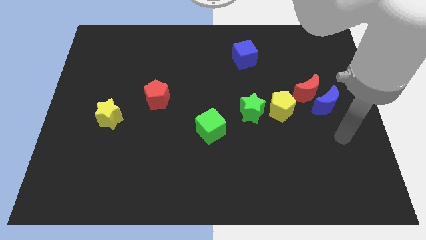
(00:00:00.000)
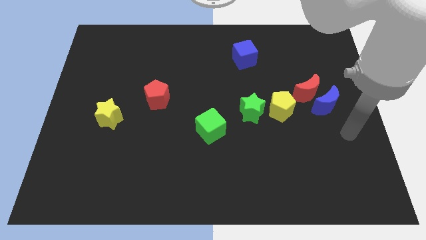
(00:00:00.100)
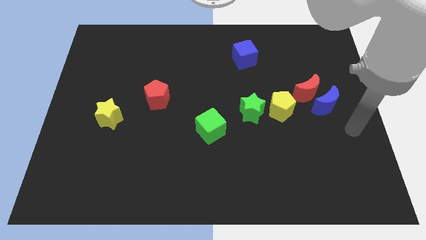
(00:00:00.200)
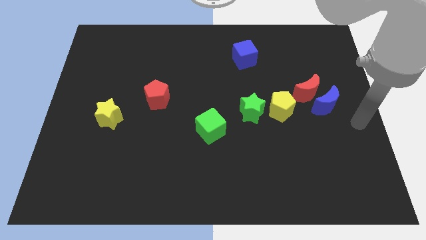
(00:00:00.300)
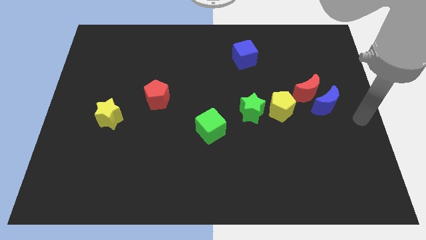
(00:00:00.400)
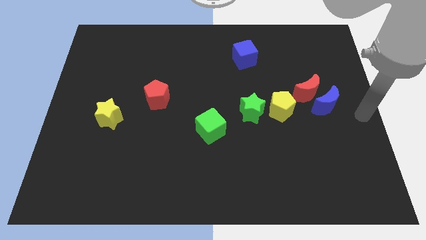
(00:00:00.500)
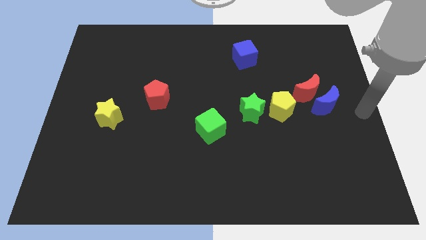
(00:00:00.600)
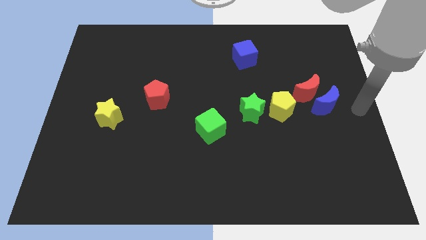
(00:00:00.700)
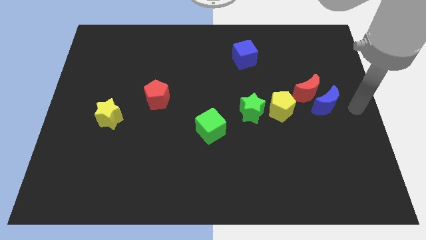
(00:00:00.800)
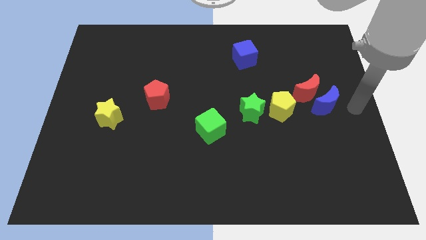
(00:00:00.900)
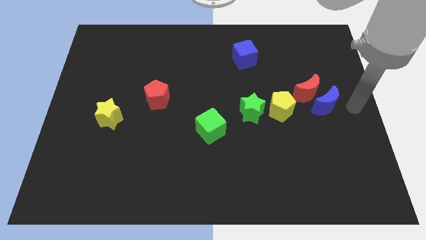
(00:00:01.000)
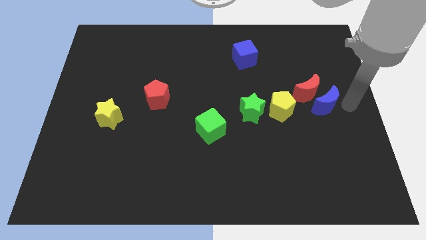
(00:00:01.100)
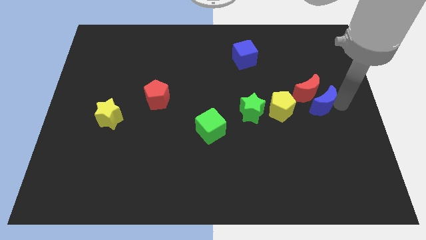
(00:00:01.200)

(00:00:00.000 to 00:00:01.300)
place the arm right side of the blue moon

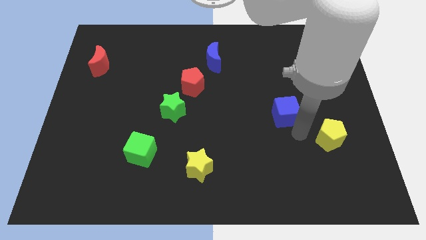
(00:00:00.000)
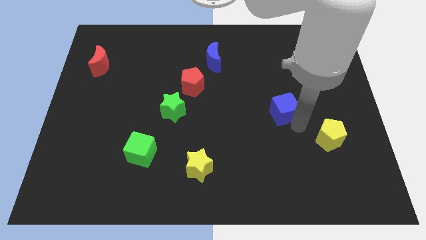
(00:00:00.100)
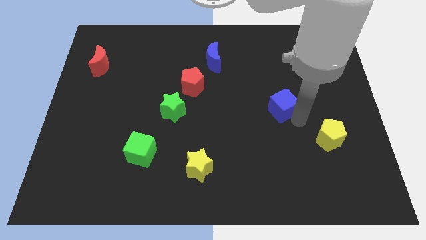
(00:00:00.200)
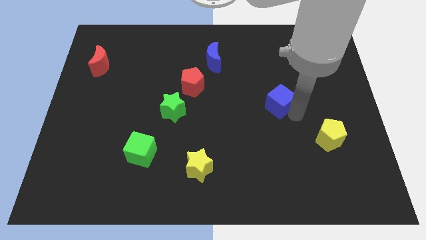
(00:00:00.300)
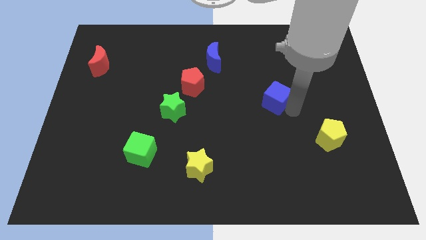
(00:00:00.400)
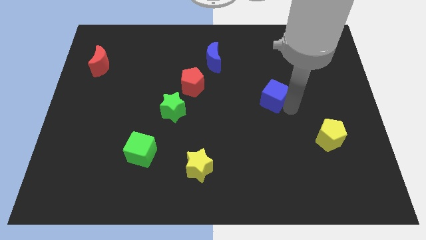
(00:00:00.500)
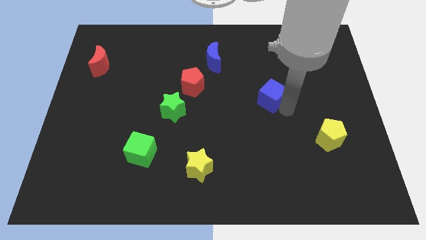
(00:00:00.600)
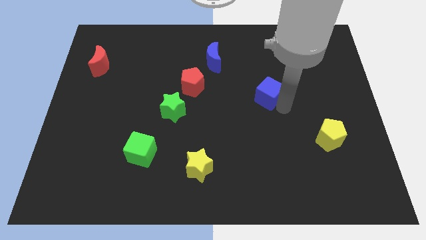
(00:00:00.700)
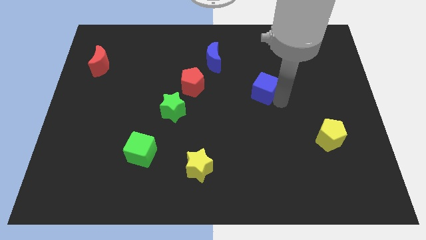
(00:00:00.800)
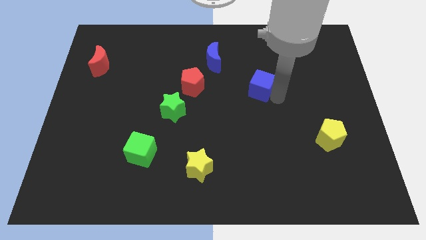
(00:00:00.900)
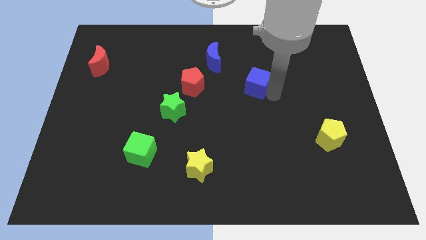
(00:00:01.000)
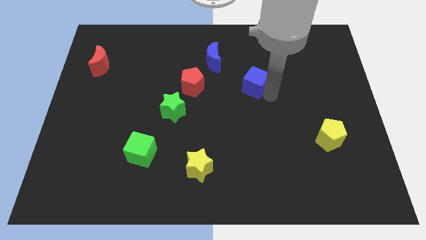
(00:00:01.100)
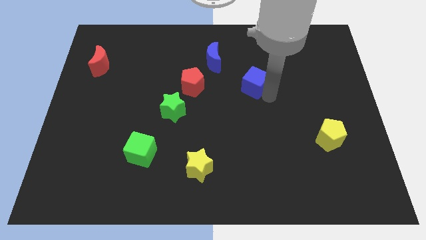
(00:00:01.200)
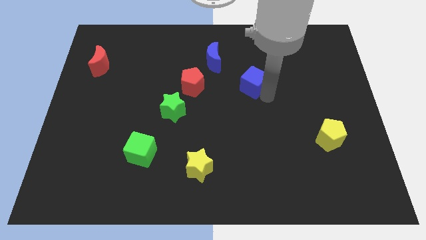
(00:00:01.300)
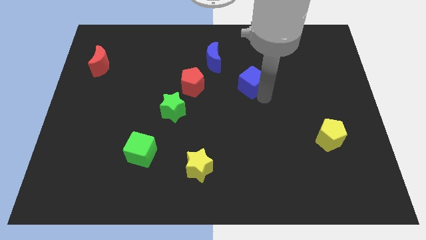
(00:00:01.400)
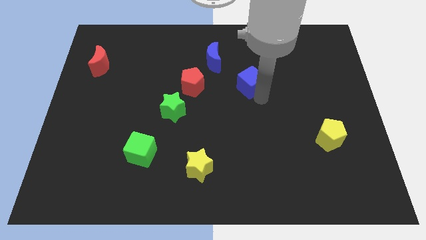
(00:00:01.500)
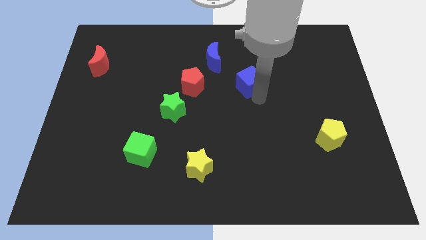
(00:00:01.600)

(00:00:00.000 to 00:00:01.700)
place the blue cube to the right of the blue moon and the red pentagon to form a triangle

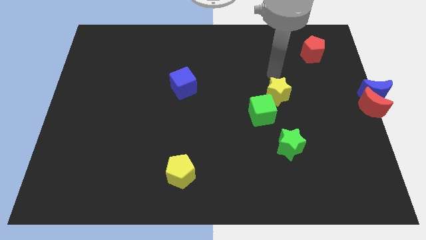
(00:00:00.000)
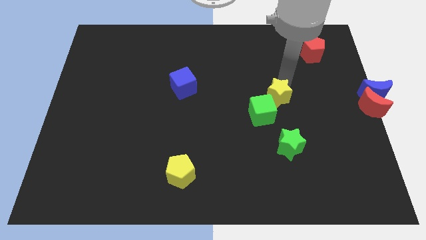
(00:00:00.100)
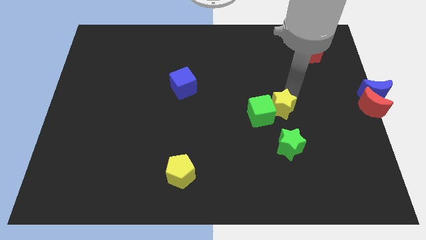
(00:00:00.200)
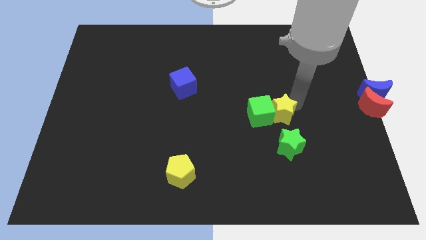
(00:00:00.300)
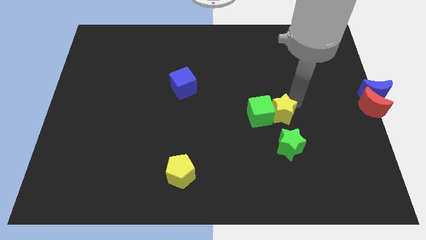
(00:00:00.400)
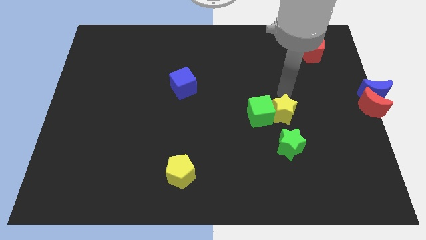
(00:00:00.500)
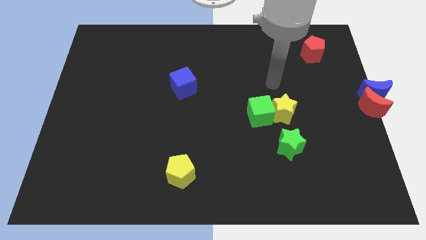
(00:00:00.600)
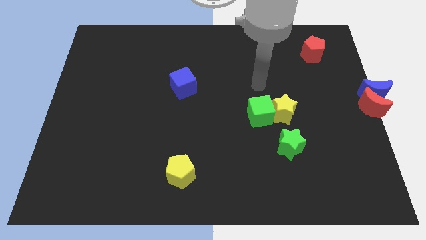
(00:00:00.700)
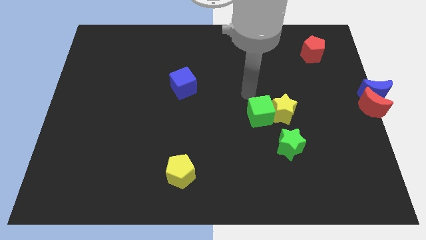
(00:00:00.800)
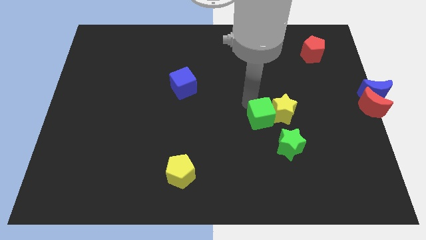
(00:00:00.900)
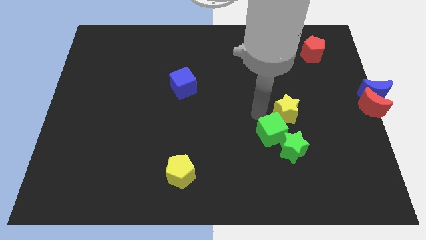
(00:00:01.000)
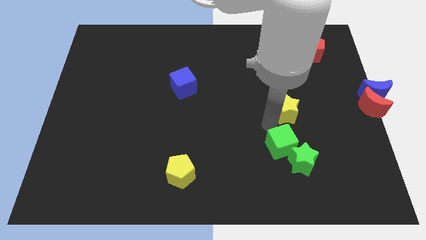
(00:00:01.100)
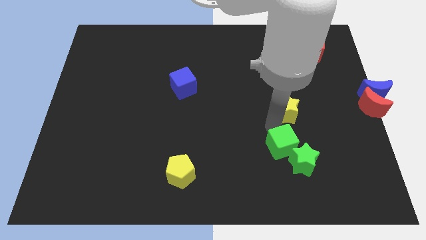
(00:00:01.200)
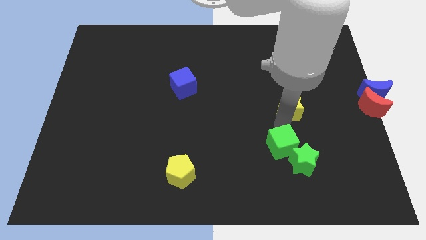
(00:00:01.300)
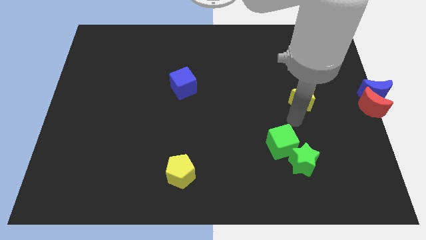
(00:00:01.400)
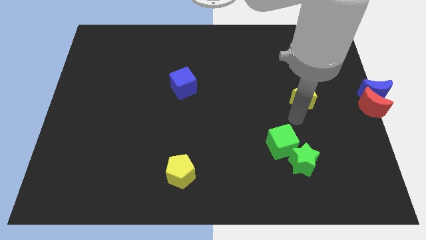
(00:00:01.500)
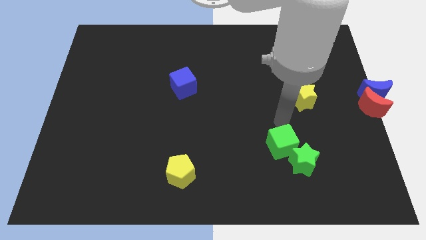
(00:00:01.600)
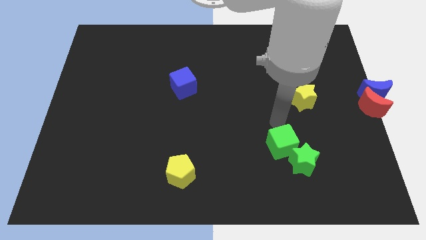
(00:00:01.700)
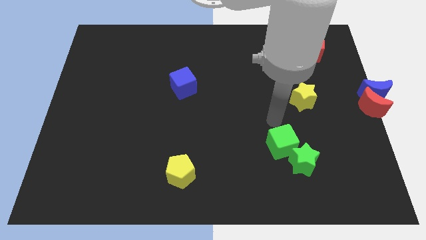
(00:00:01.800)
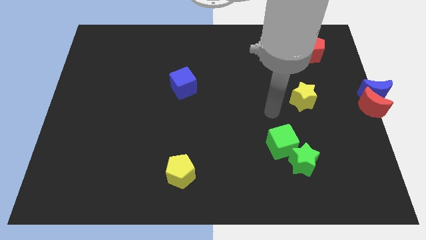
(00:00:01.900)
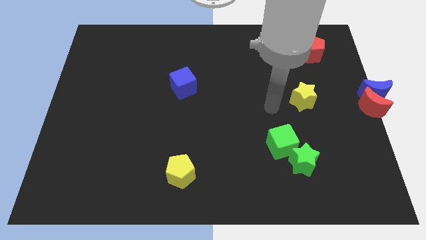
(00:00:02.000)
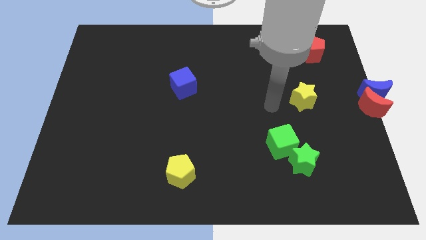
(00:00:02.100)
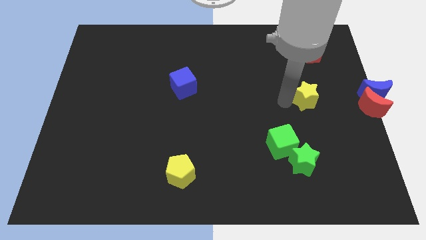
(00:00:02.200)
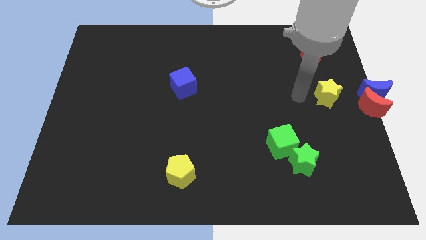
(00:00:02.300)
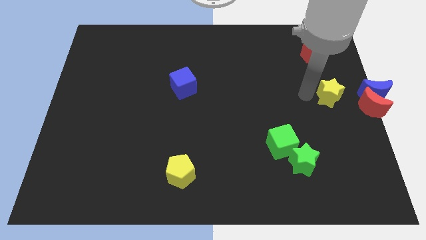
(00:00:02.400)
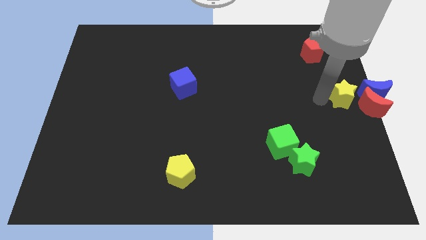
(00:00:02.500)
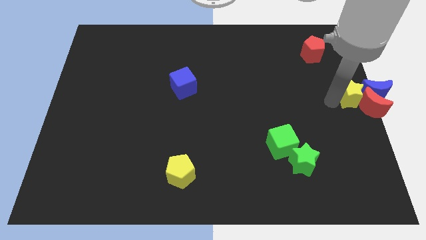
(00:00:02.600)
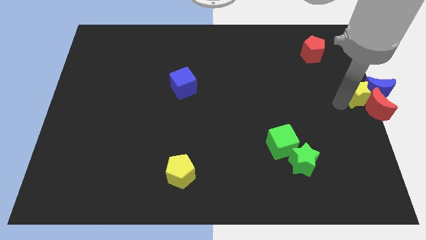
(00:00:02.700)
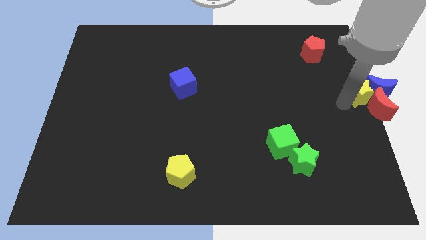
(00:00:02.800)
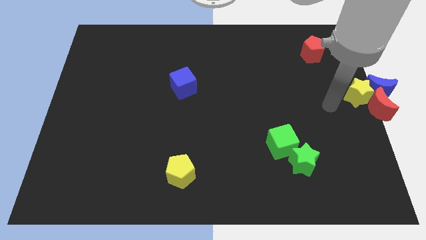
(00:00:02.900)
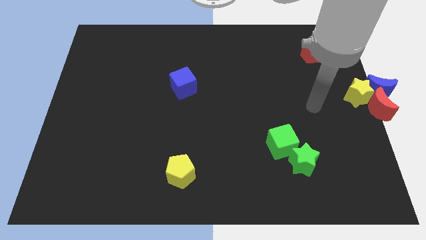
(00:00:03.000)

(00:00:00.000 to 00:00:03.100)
push the yellow star into the blue and red crescent

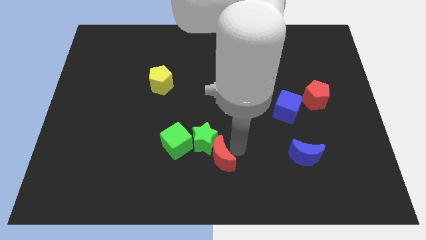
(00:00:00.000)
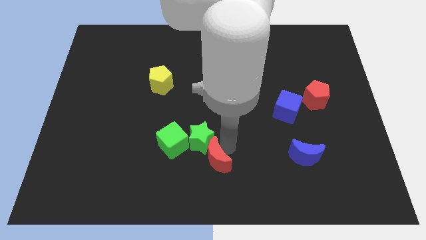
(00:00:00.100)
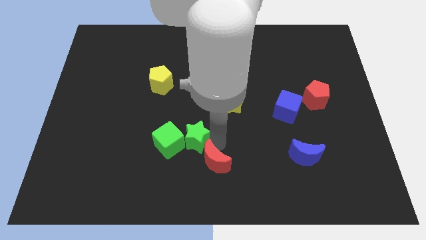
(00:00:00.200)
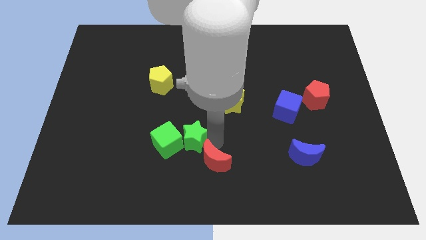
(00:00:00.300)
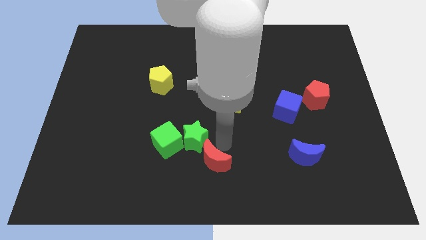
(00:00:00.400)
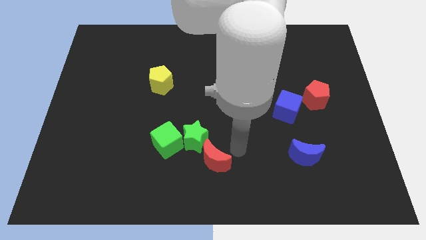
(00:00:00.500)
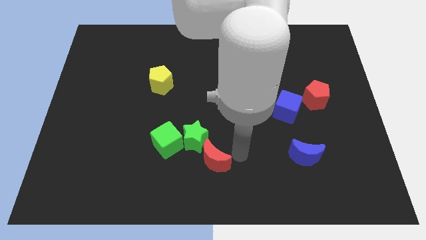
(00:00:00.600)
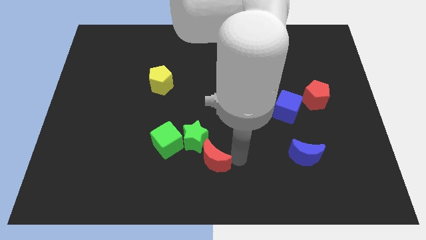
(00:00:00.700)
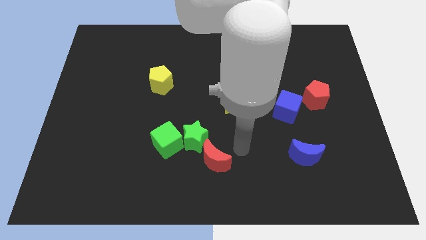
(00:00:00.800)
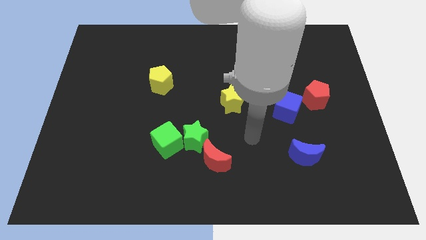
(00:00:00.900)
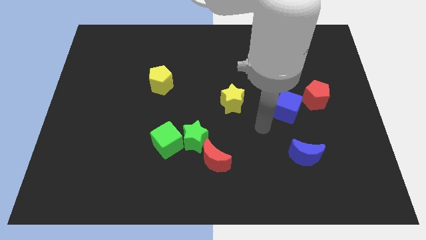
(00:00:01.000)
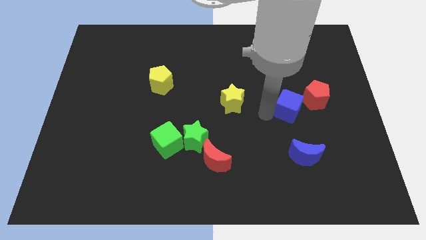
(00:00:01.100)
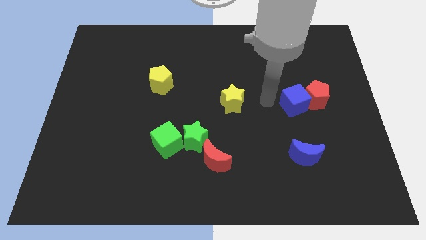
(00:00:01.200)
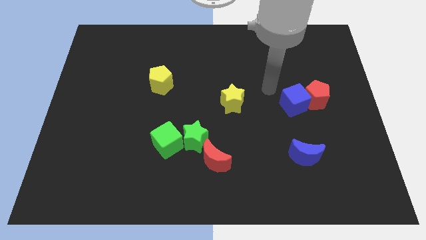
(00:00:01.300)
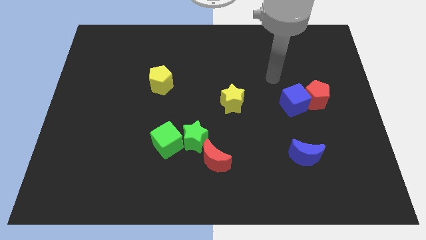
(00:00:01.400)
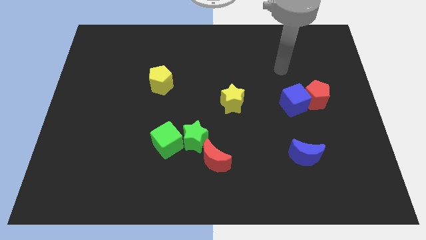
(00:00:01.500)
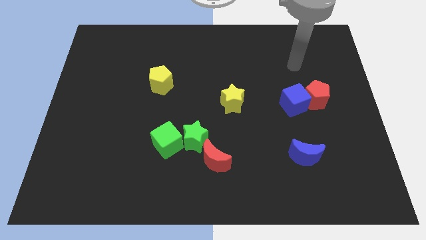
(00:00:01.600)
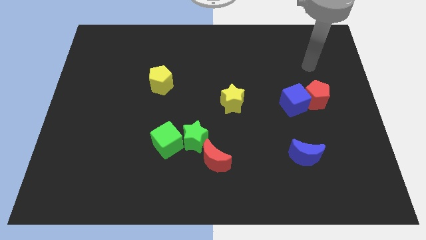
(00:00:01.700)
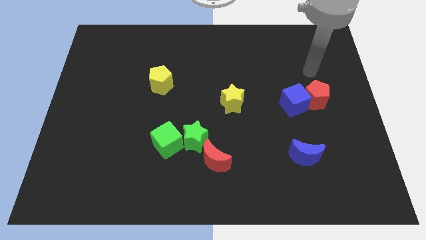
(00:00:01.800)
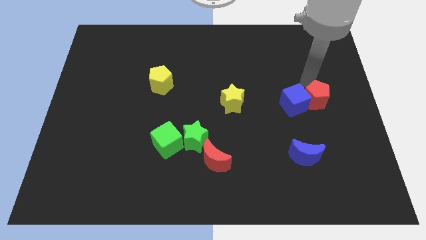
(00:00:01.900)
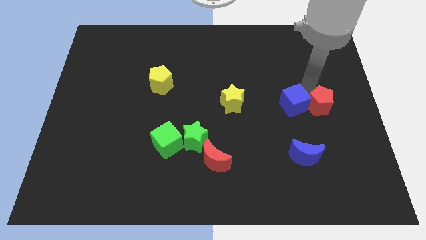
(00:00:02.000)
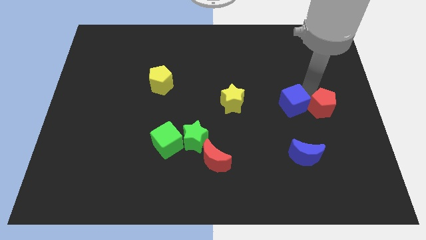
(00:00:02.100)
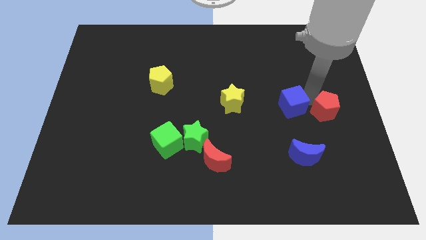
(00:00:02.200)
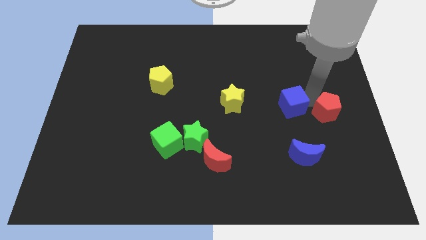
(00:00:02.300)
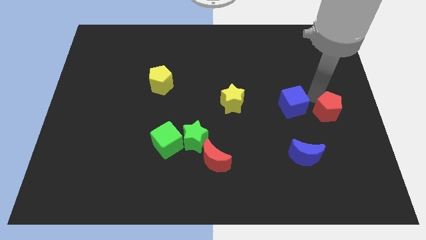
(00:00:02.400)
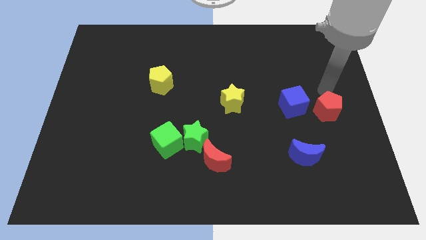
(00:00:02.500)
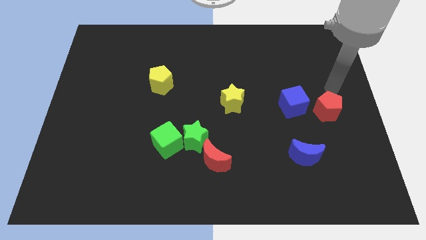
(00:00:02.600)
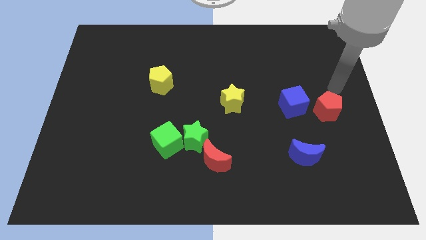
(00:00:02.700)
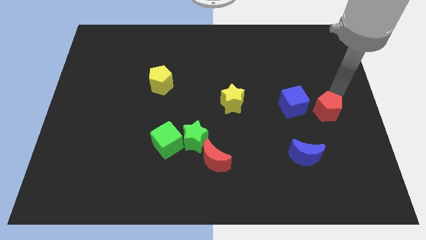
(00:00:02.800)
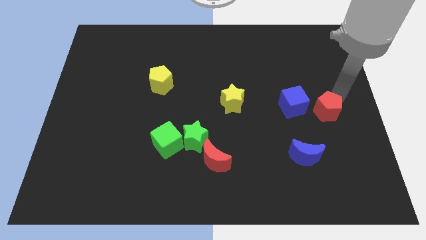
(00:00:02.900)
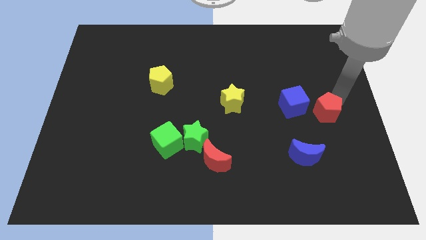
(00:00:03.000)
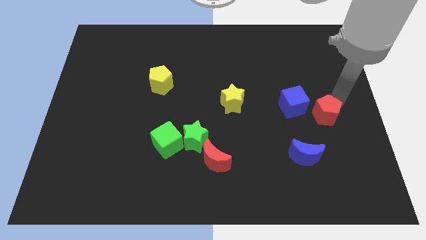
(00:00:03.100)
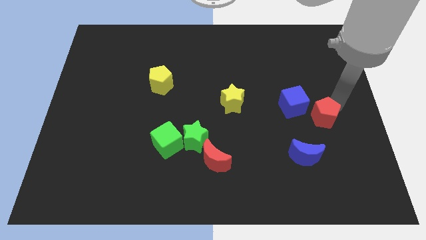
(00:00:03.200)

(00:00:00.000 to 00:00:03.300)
move your arm away from the red moon
